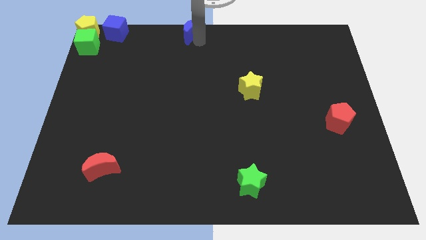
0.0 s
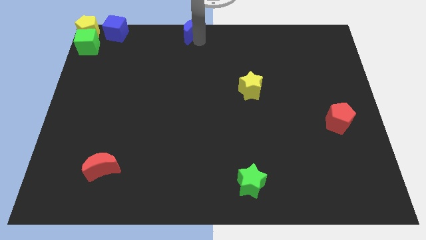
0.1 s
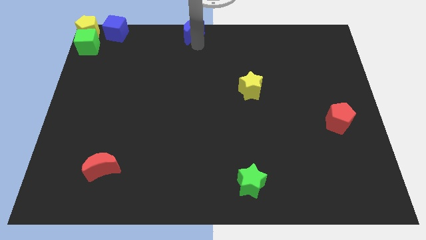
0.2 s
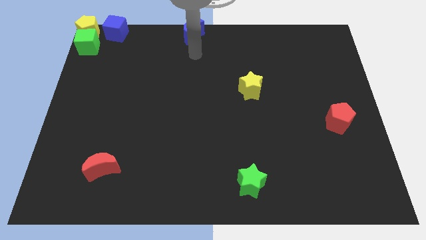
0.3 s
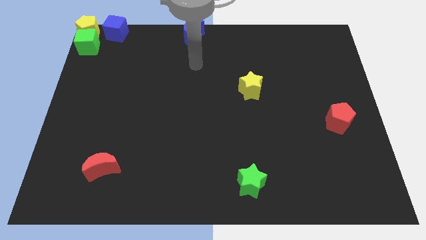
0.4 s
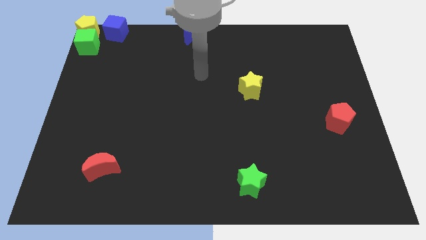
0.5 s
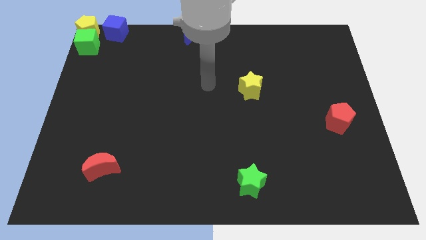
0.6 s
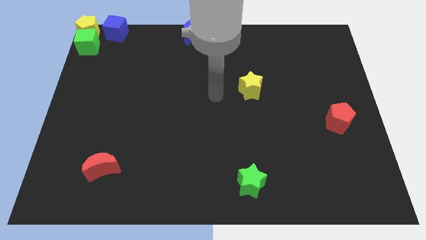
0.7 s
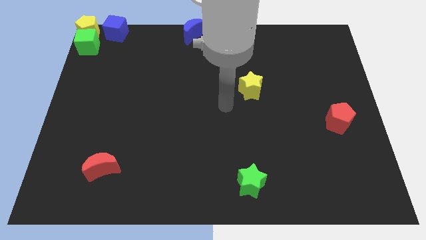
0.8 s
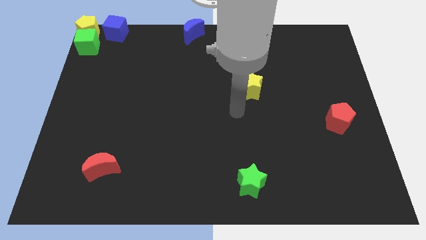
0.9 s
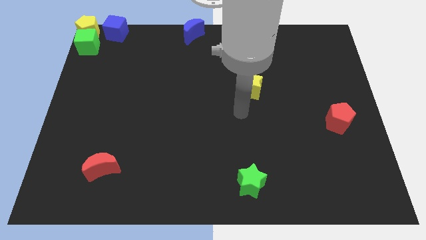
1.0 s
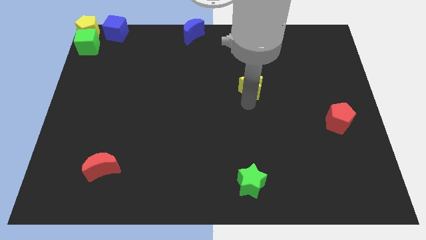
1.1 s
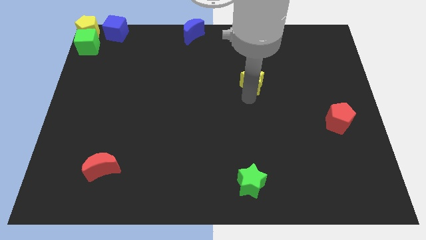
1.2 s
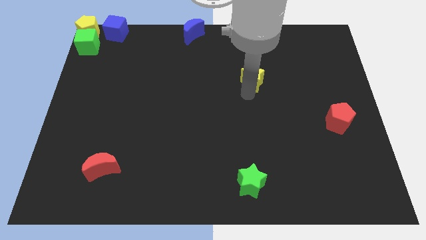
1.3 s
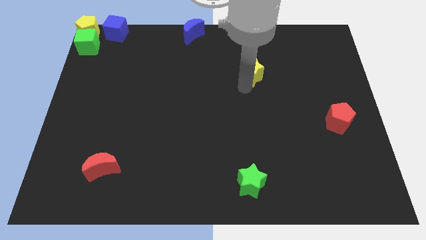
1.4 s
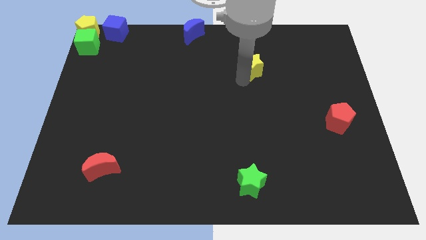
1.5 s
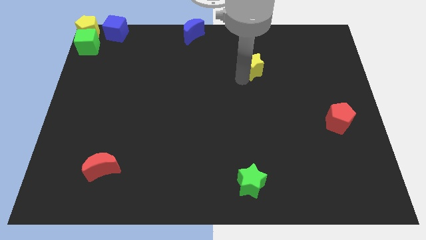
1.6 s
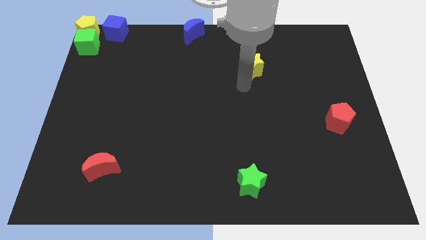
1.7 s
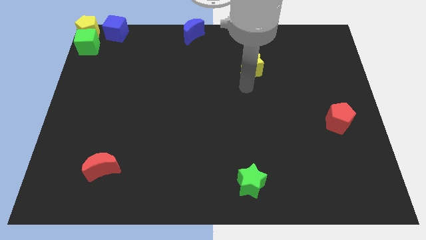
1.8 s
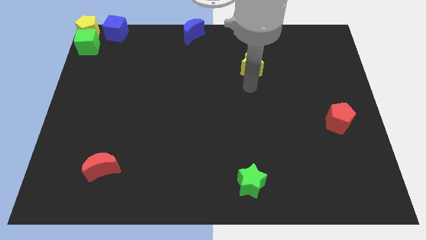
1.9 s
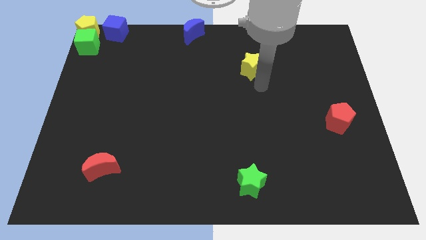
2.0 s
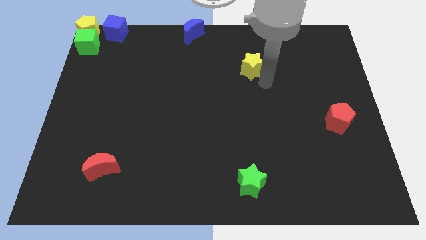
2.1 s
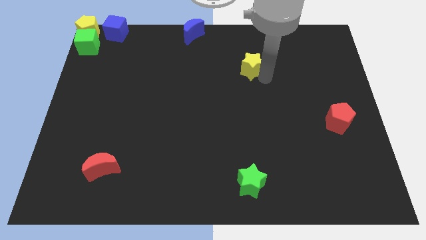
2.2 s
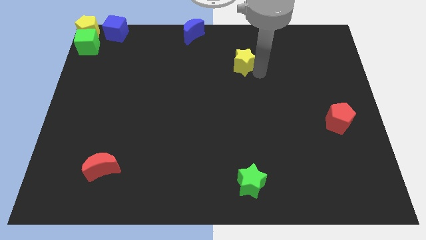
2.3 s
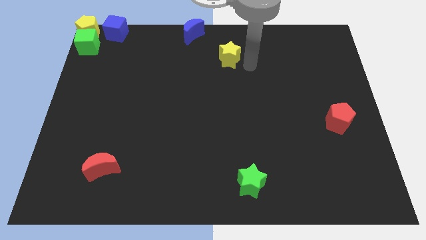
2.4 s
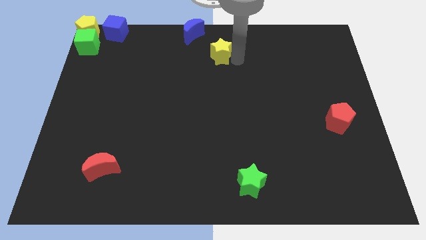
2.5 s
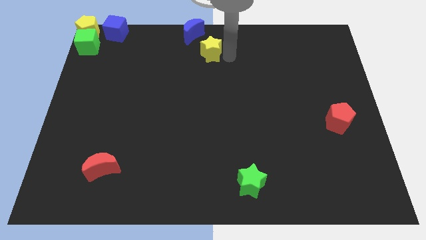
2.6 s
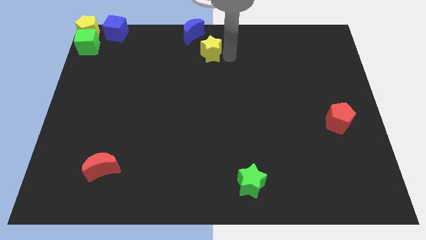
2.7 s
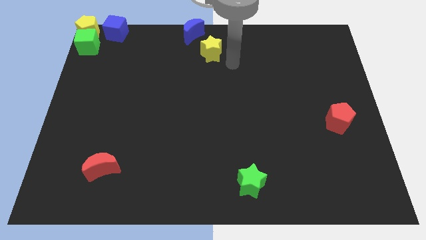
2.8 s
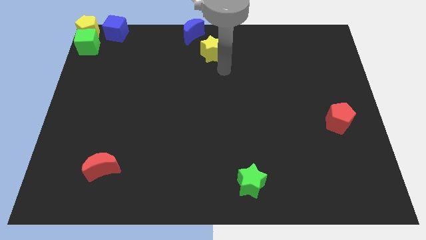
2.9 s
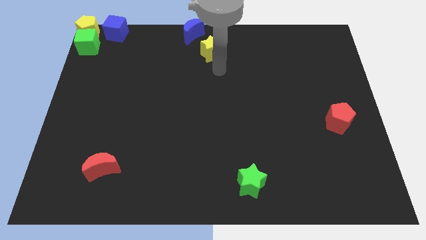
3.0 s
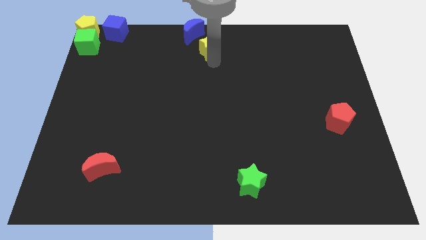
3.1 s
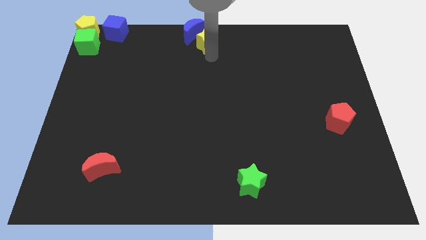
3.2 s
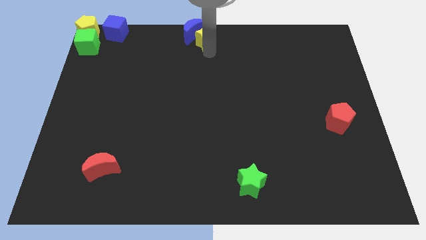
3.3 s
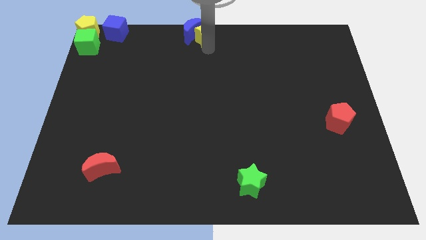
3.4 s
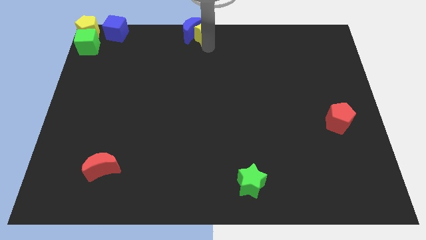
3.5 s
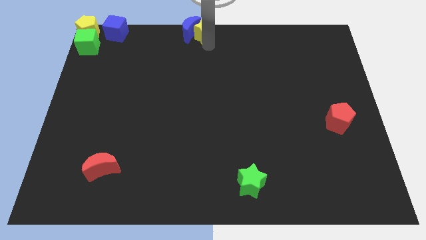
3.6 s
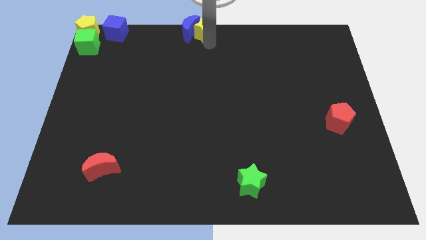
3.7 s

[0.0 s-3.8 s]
push the yellow star into the blue moon

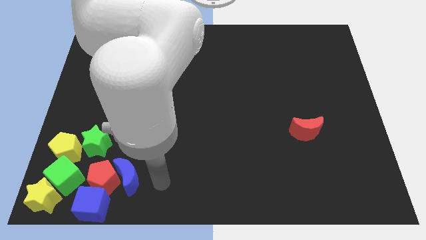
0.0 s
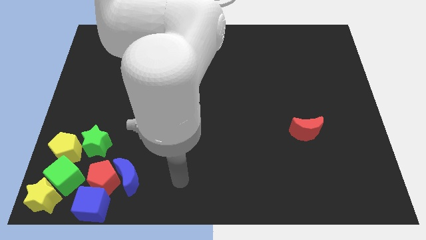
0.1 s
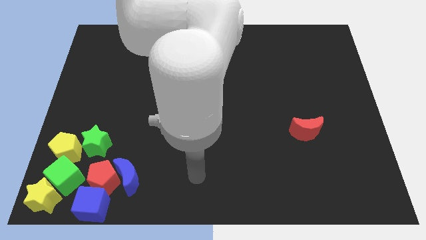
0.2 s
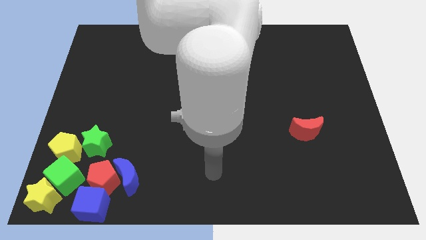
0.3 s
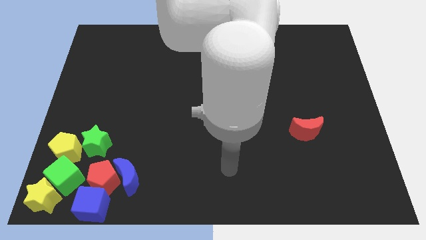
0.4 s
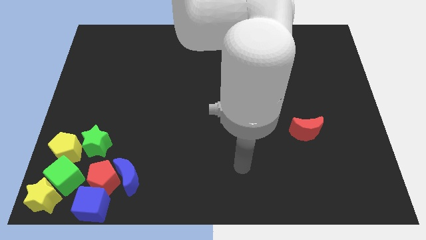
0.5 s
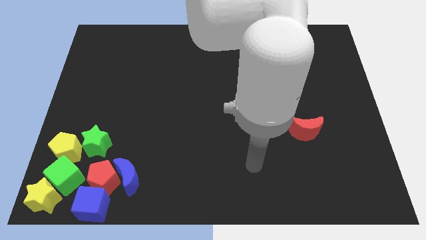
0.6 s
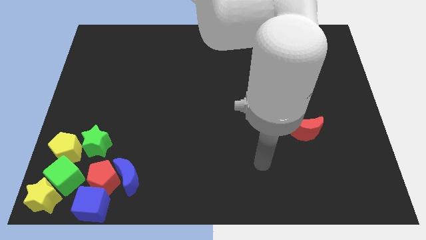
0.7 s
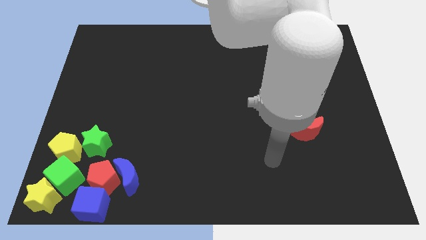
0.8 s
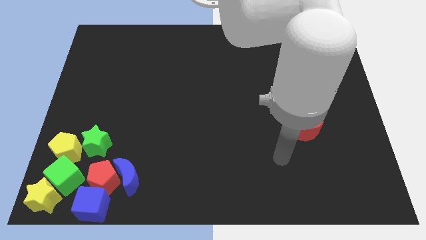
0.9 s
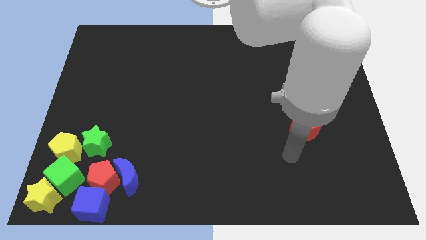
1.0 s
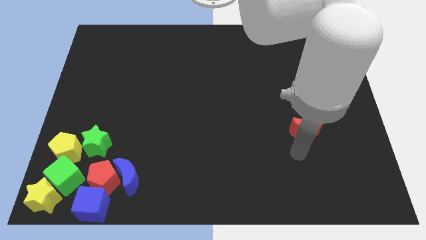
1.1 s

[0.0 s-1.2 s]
move the arm away from the blue crescent

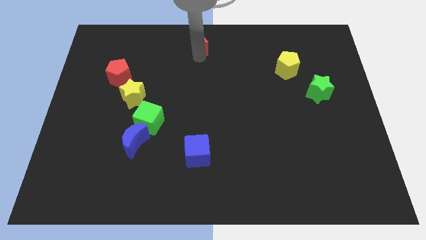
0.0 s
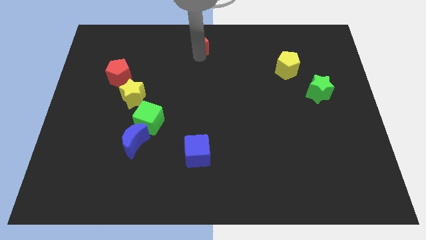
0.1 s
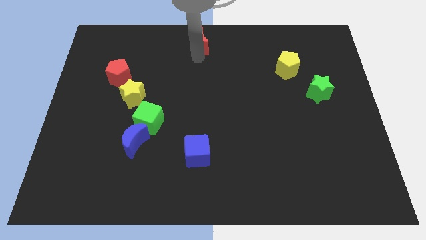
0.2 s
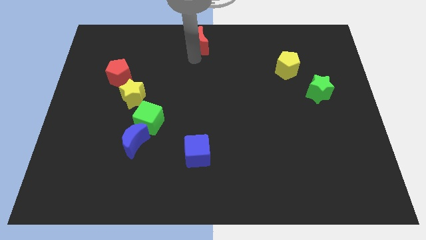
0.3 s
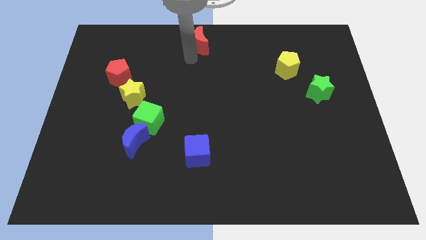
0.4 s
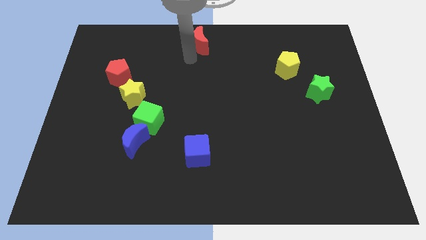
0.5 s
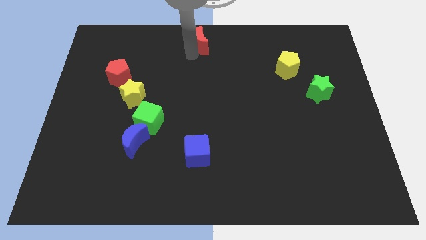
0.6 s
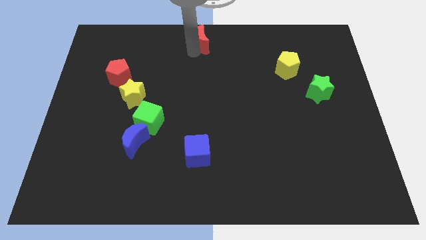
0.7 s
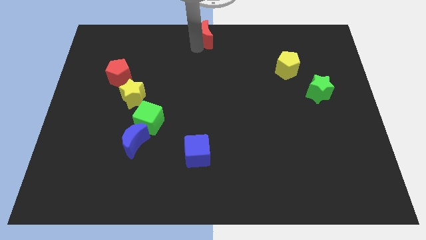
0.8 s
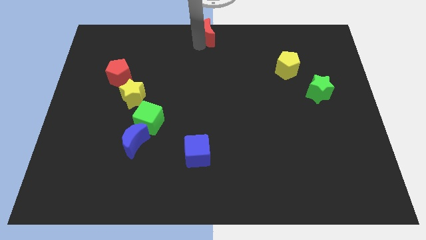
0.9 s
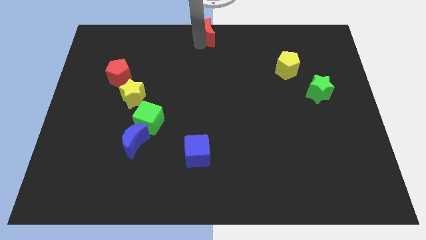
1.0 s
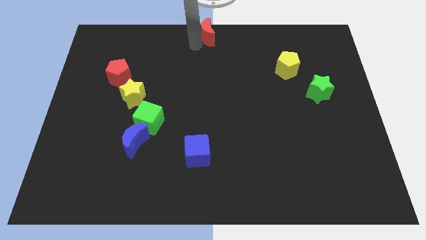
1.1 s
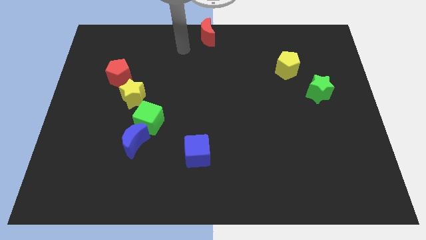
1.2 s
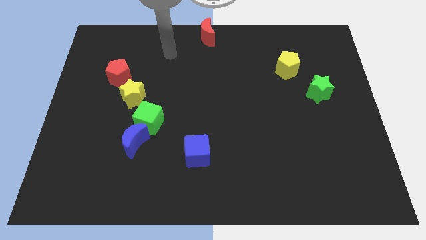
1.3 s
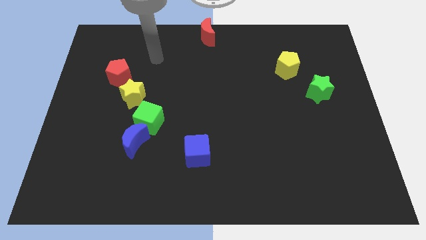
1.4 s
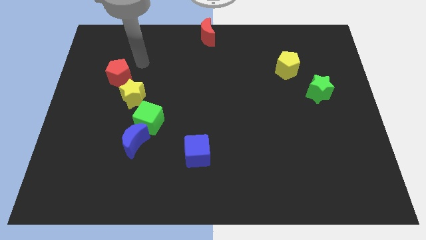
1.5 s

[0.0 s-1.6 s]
move red moon to the middle of the board

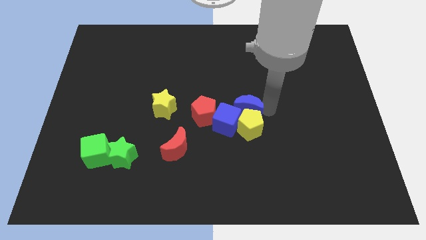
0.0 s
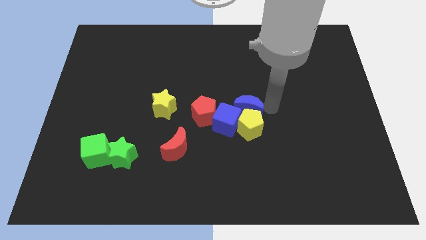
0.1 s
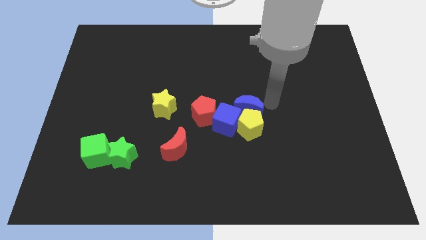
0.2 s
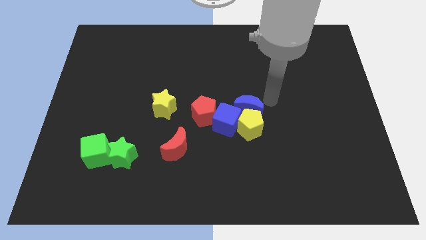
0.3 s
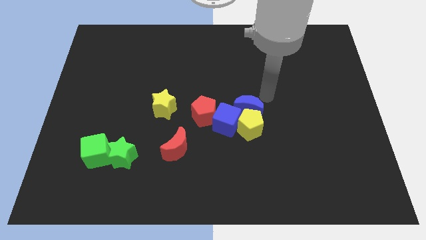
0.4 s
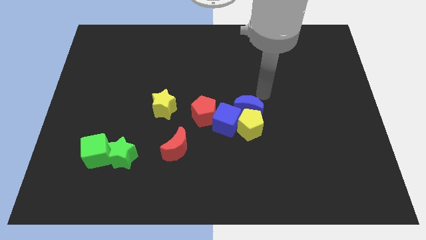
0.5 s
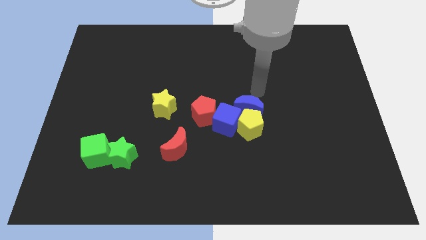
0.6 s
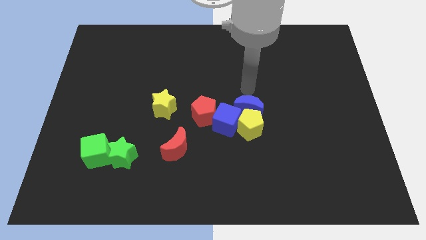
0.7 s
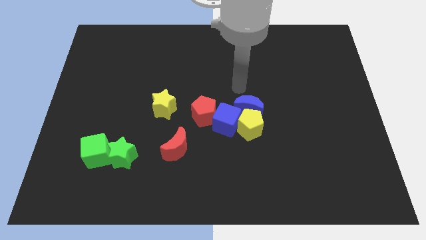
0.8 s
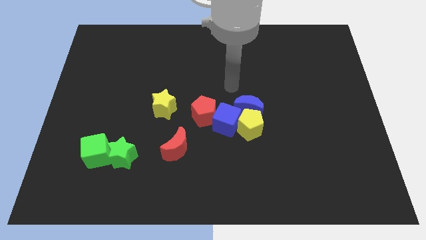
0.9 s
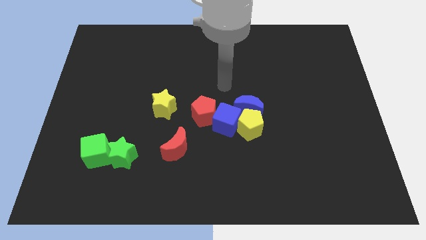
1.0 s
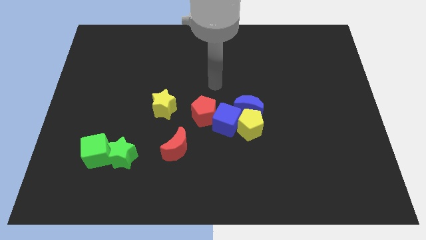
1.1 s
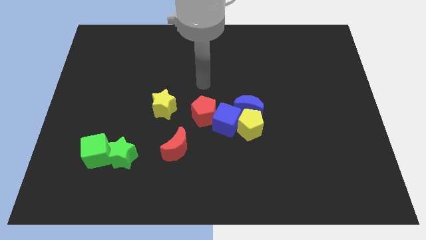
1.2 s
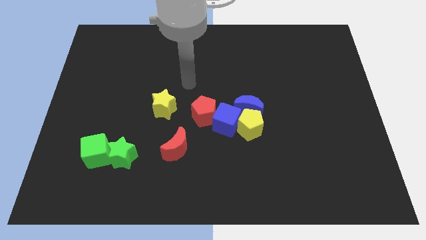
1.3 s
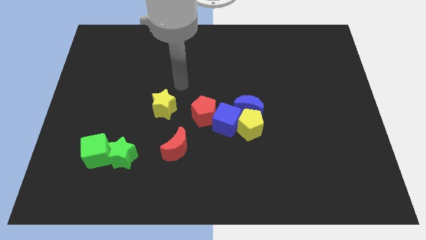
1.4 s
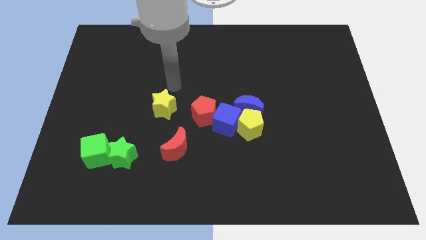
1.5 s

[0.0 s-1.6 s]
move your arm on top of the yellow star

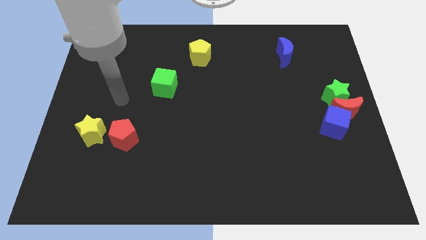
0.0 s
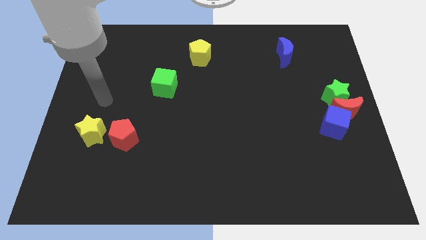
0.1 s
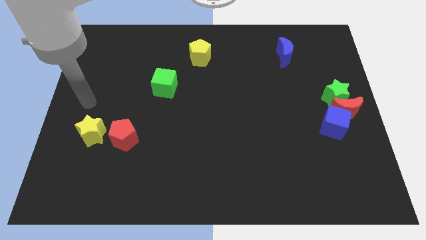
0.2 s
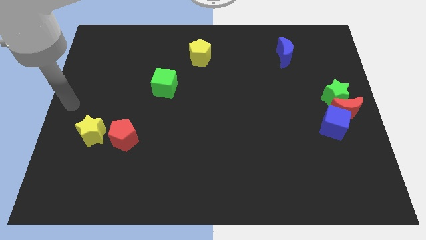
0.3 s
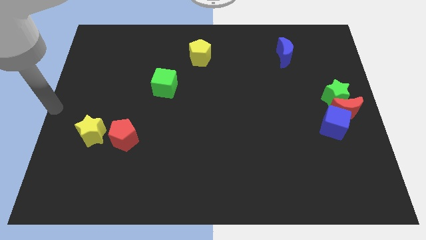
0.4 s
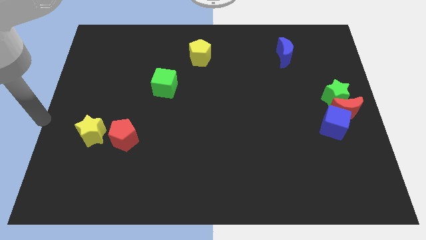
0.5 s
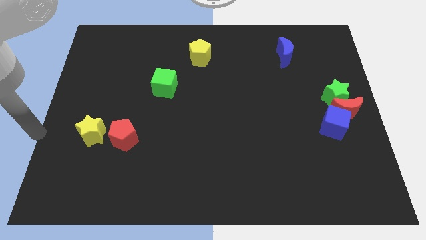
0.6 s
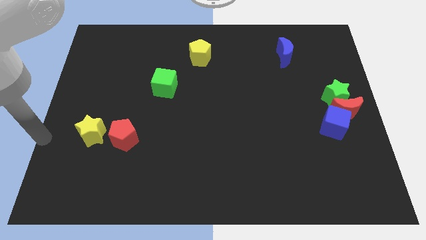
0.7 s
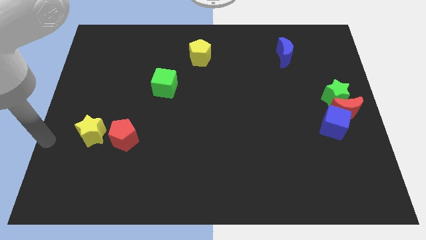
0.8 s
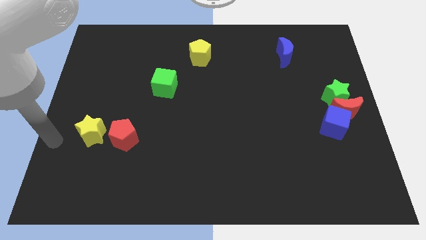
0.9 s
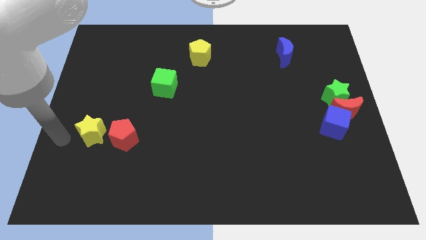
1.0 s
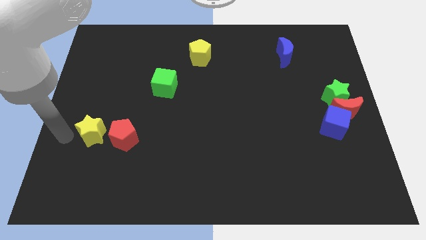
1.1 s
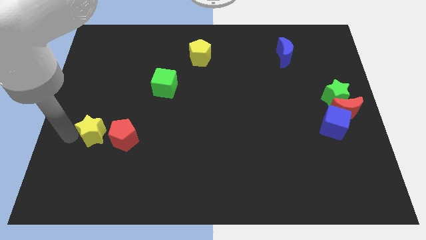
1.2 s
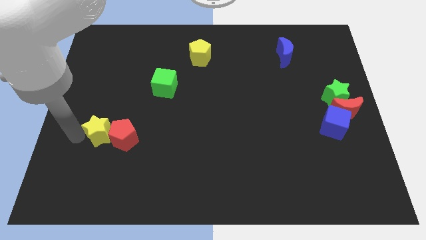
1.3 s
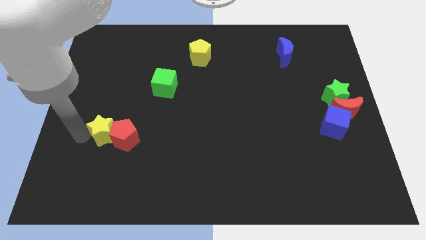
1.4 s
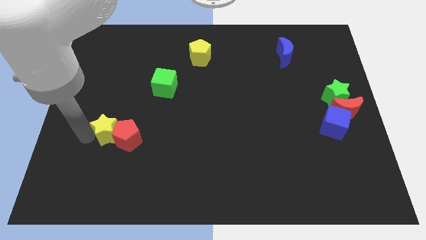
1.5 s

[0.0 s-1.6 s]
move the yellow star into the left side of the red pentagon
